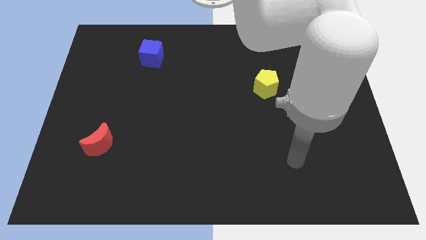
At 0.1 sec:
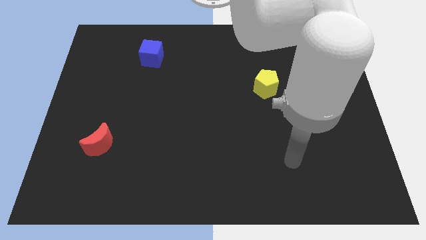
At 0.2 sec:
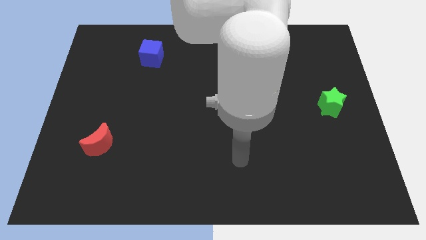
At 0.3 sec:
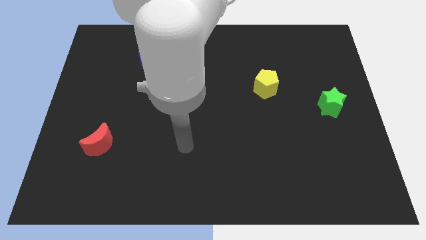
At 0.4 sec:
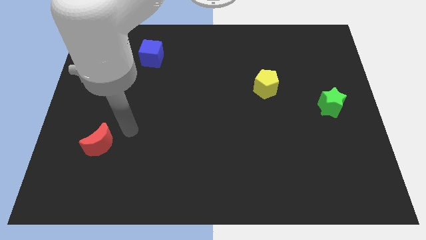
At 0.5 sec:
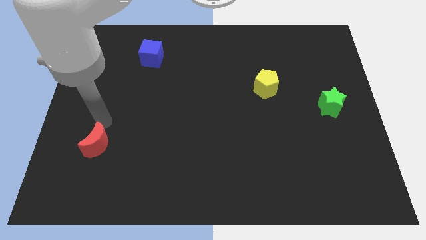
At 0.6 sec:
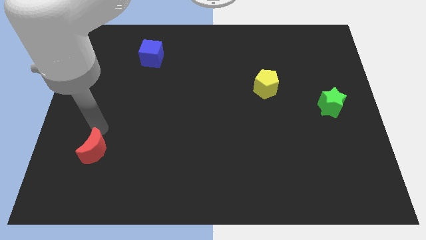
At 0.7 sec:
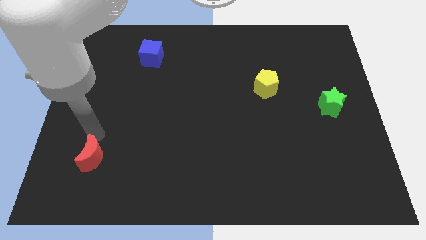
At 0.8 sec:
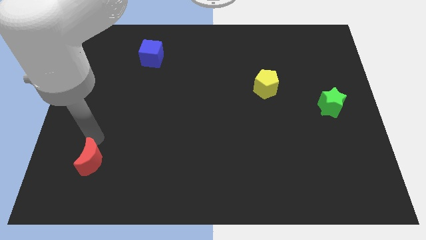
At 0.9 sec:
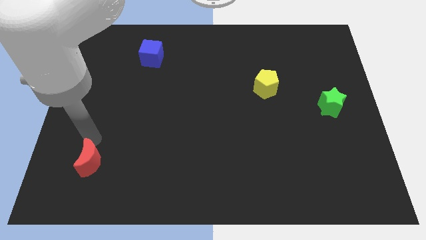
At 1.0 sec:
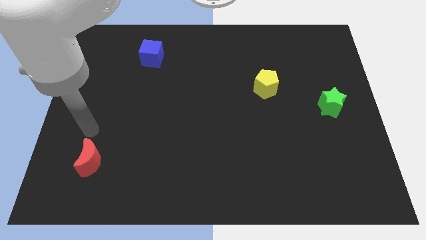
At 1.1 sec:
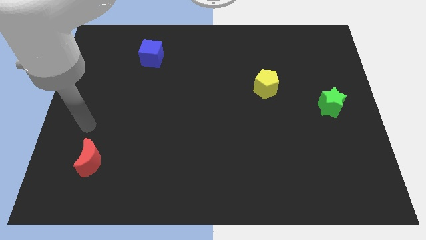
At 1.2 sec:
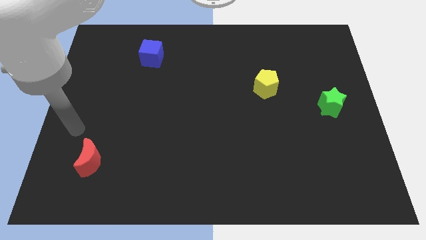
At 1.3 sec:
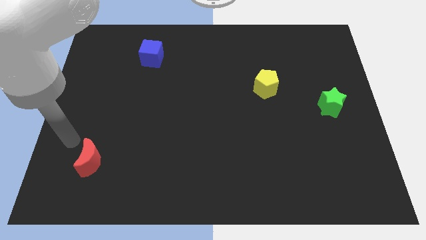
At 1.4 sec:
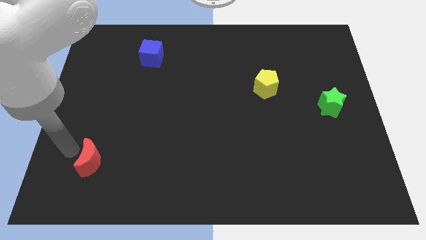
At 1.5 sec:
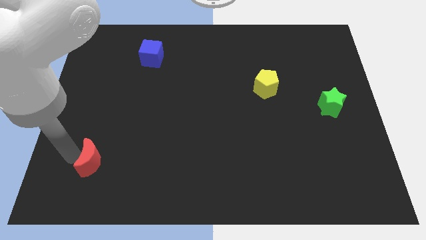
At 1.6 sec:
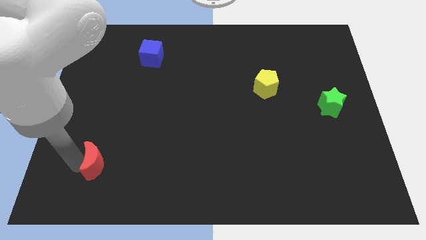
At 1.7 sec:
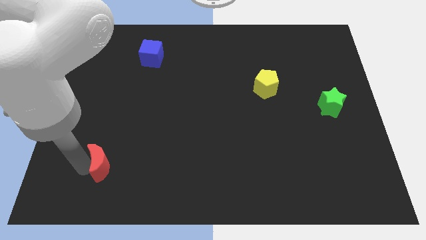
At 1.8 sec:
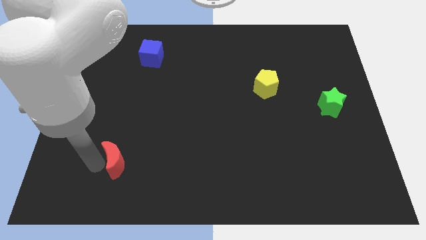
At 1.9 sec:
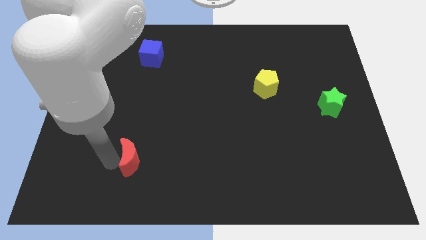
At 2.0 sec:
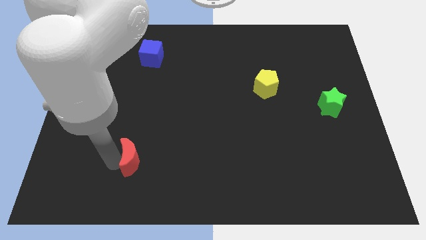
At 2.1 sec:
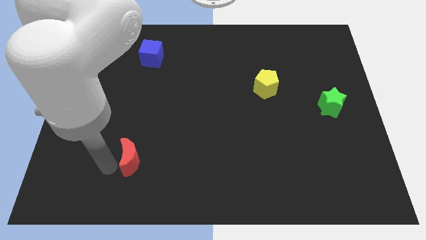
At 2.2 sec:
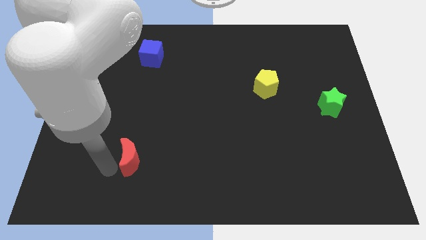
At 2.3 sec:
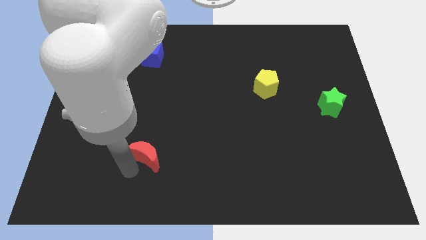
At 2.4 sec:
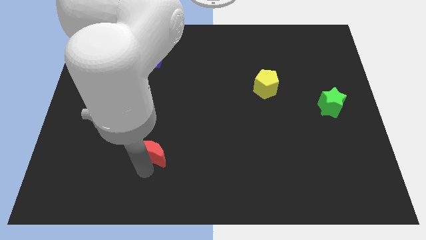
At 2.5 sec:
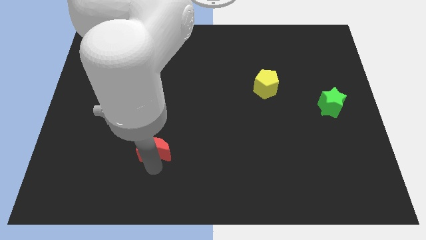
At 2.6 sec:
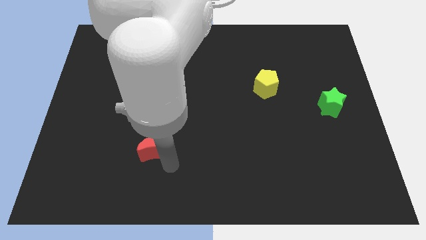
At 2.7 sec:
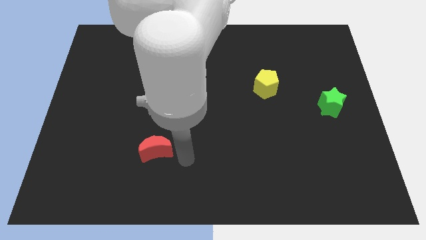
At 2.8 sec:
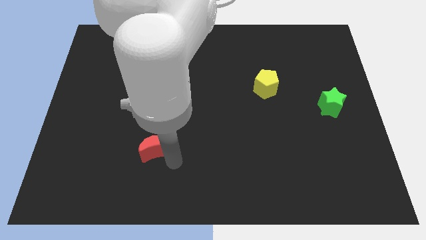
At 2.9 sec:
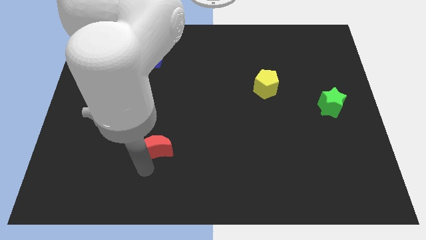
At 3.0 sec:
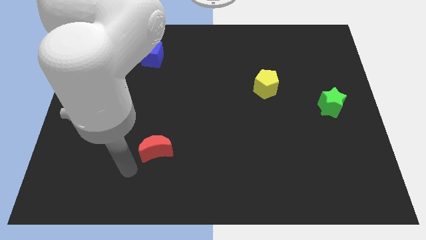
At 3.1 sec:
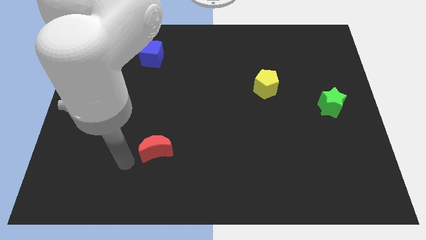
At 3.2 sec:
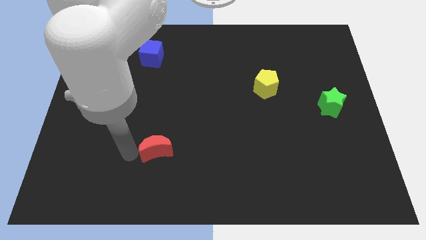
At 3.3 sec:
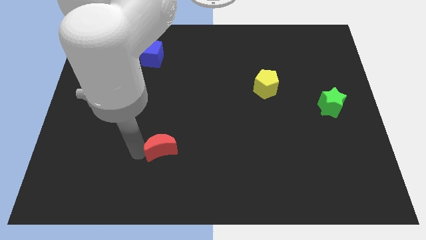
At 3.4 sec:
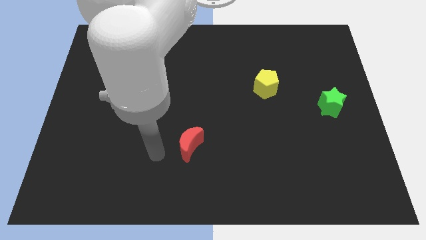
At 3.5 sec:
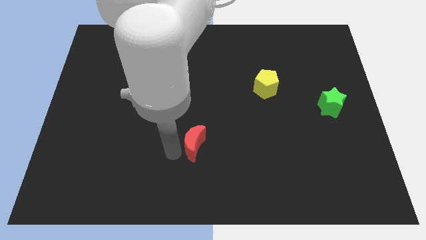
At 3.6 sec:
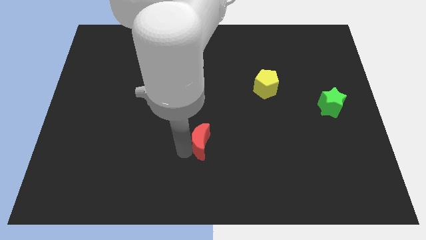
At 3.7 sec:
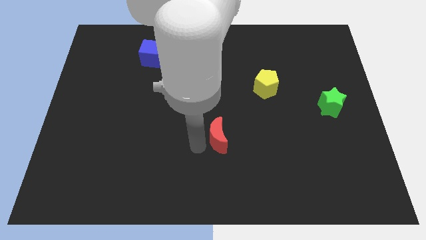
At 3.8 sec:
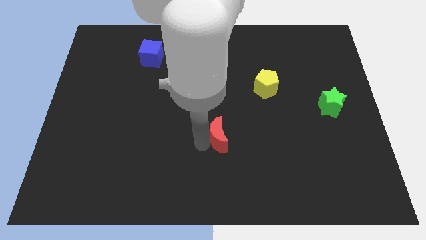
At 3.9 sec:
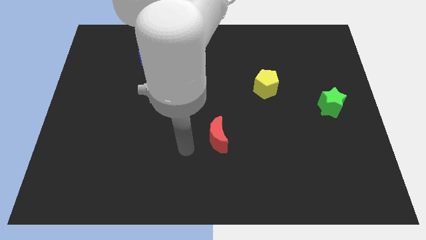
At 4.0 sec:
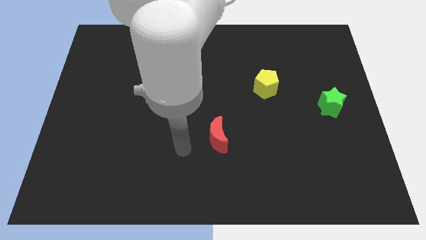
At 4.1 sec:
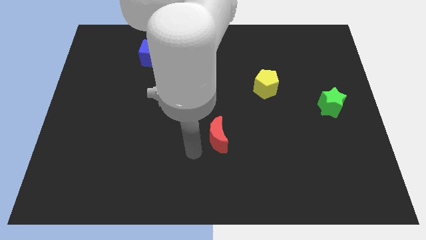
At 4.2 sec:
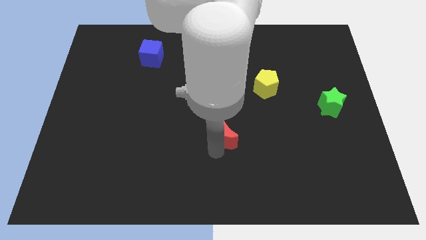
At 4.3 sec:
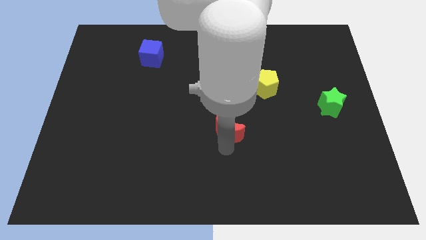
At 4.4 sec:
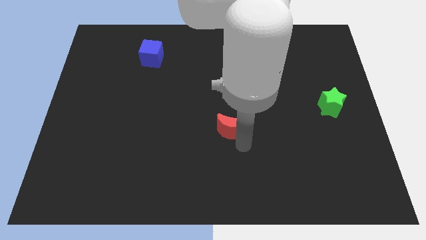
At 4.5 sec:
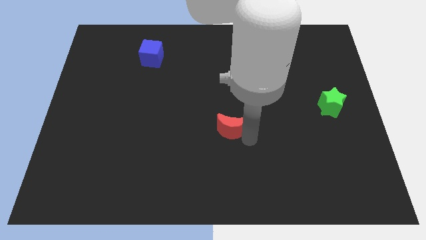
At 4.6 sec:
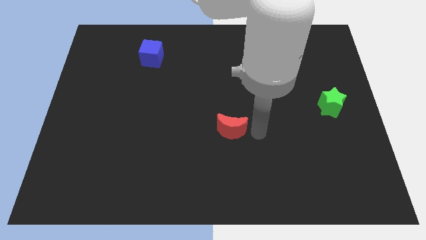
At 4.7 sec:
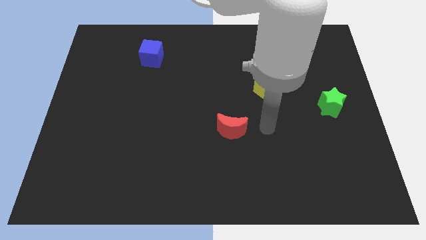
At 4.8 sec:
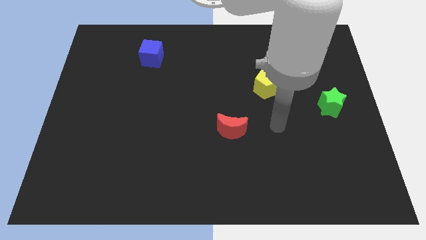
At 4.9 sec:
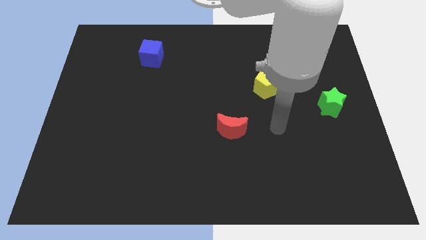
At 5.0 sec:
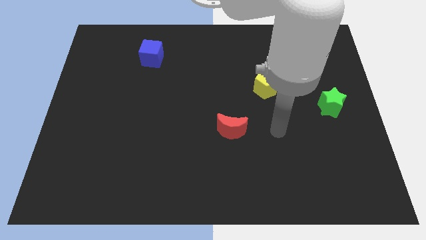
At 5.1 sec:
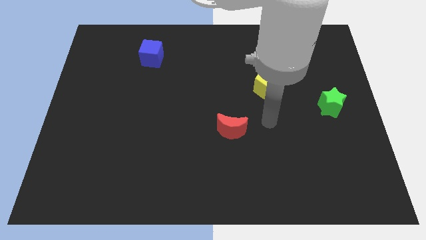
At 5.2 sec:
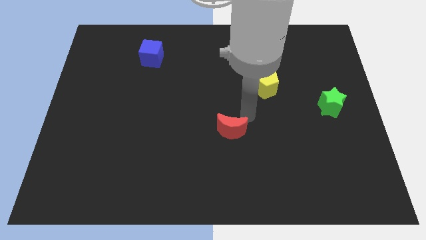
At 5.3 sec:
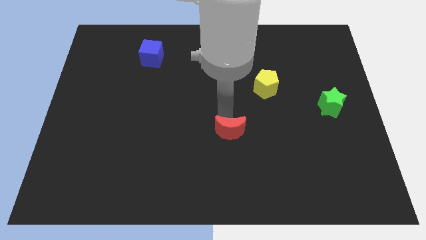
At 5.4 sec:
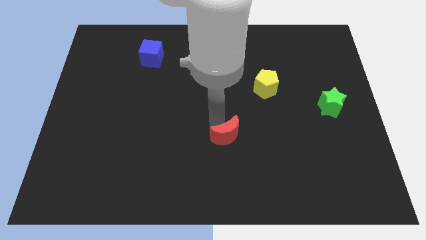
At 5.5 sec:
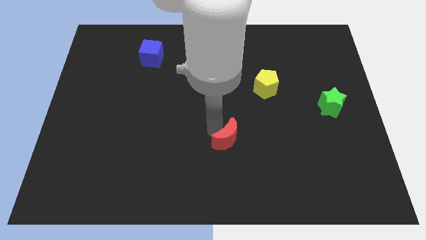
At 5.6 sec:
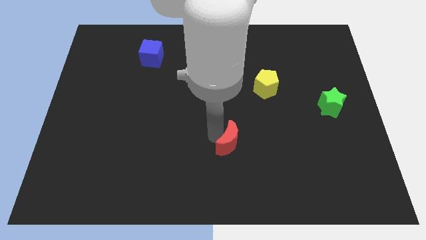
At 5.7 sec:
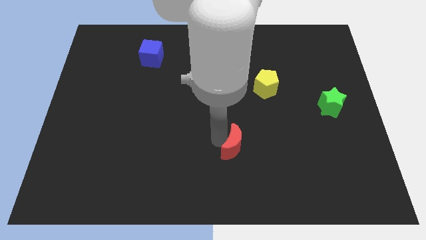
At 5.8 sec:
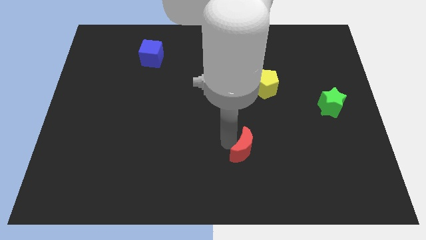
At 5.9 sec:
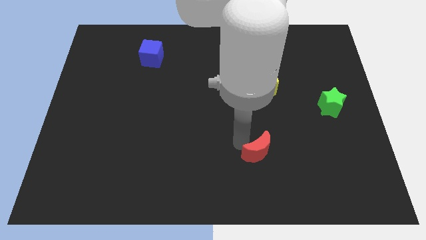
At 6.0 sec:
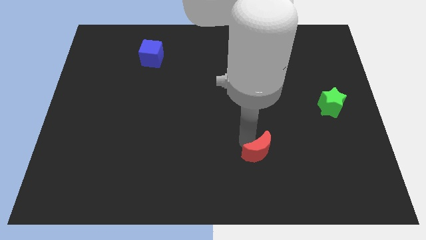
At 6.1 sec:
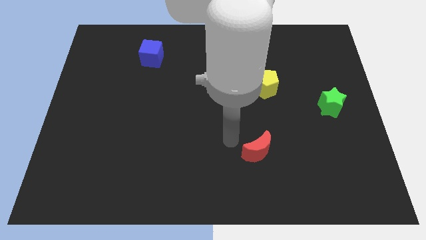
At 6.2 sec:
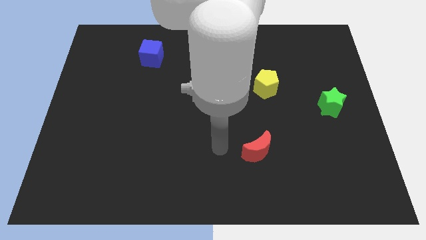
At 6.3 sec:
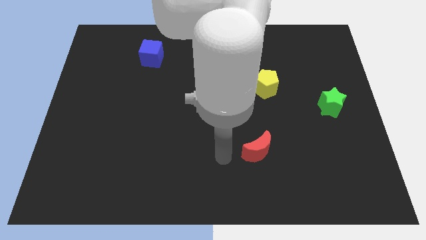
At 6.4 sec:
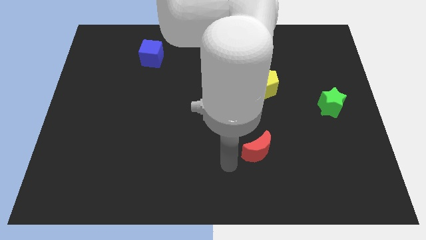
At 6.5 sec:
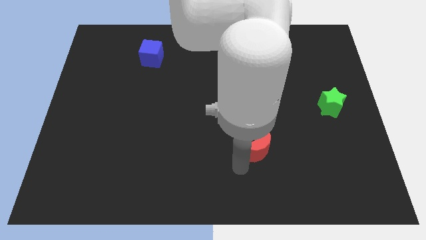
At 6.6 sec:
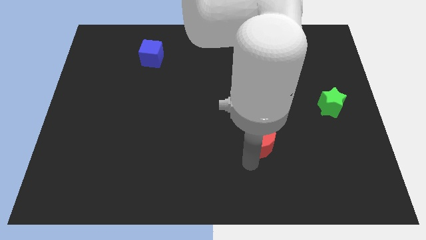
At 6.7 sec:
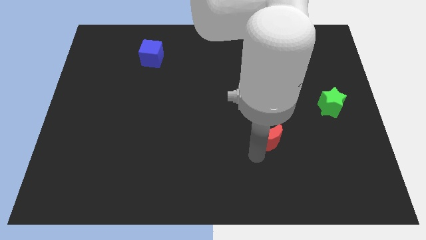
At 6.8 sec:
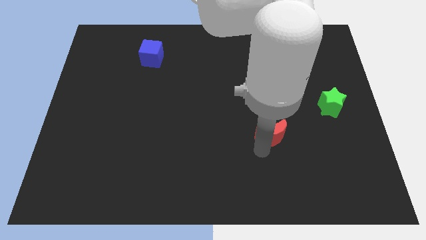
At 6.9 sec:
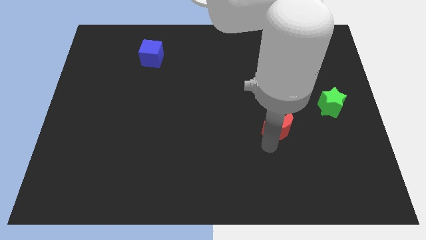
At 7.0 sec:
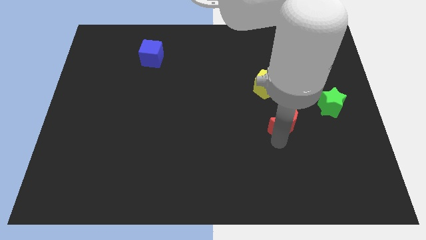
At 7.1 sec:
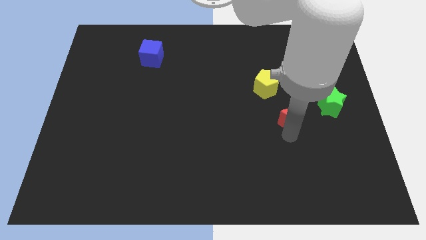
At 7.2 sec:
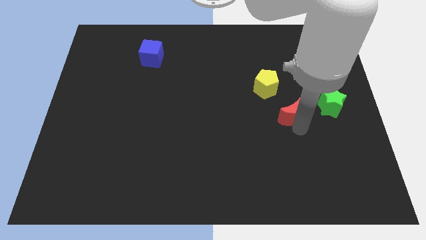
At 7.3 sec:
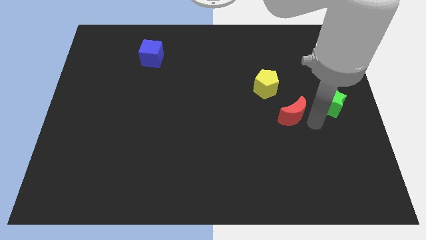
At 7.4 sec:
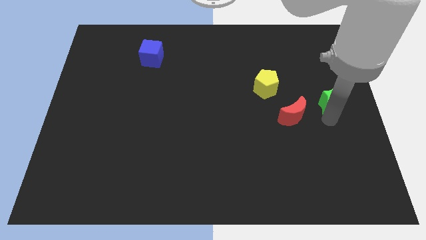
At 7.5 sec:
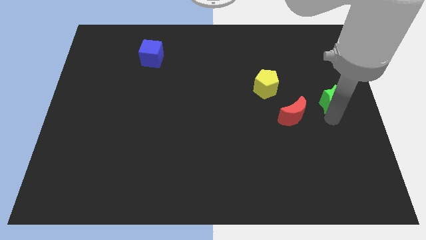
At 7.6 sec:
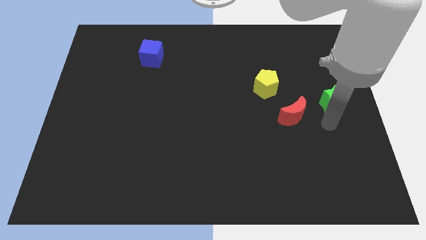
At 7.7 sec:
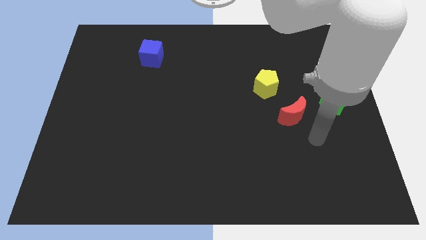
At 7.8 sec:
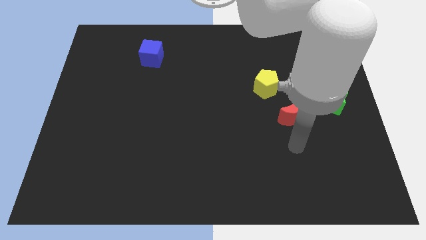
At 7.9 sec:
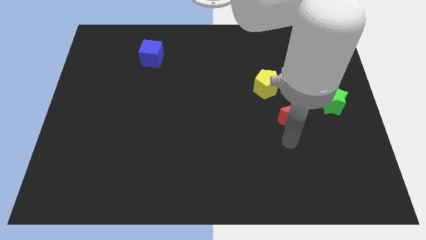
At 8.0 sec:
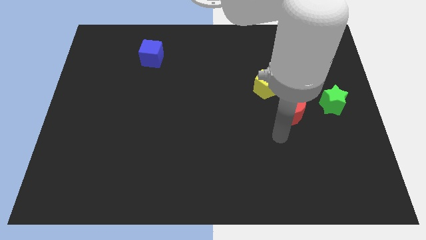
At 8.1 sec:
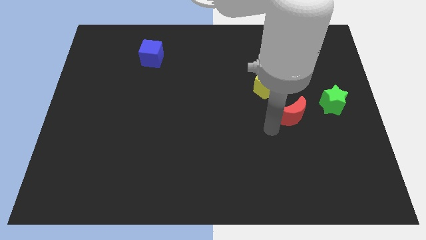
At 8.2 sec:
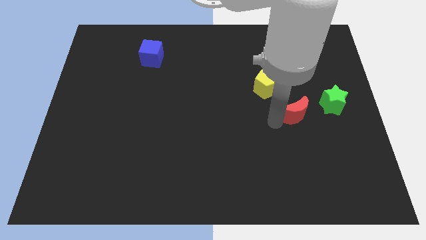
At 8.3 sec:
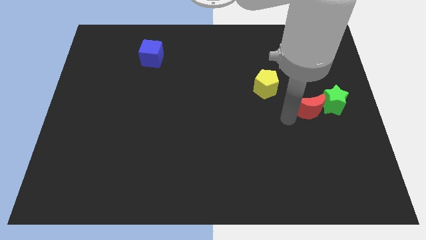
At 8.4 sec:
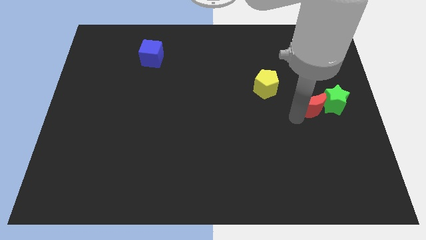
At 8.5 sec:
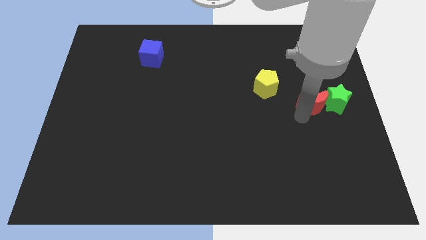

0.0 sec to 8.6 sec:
slide the red moon to the green star
